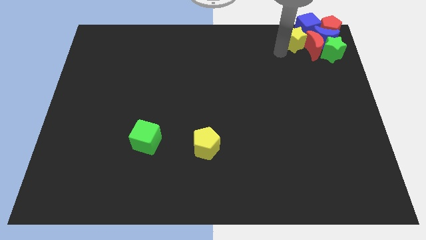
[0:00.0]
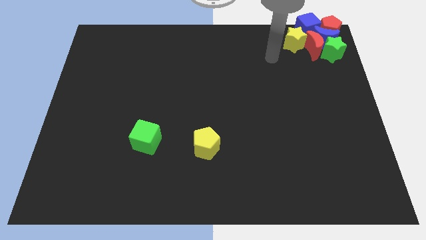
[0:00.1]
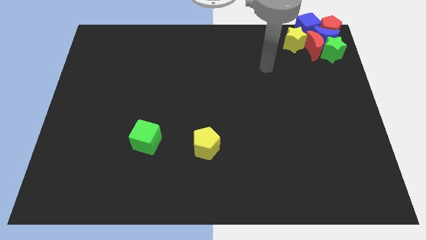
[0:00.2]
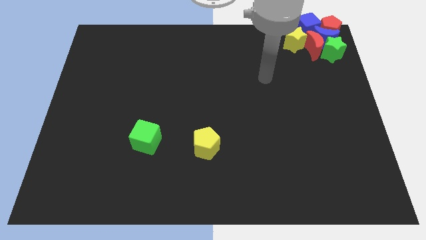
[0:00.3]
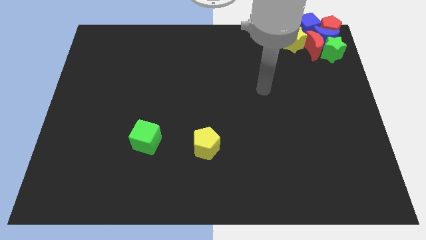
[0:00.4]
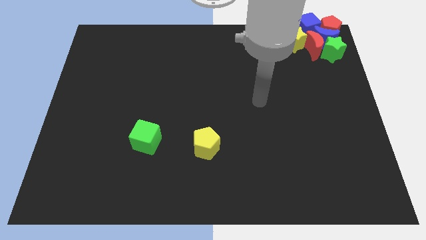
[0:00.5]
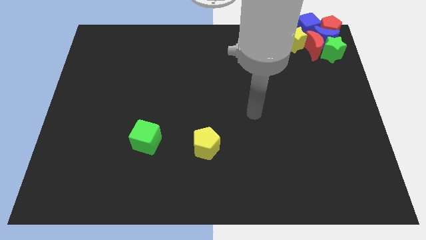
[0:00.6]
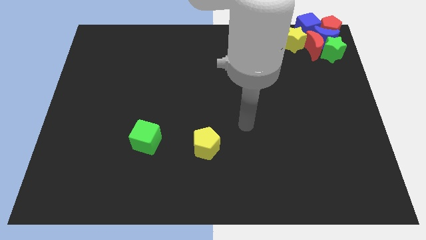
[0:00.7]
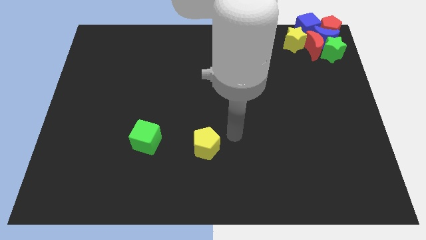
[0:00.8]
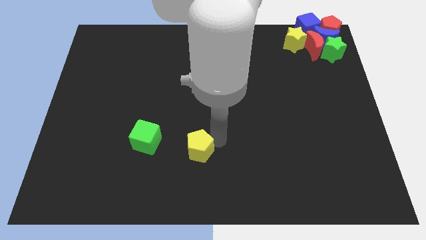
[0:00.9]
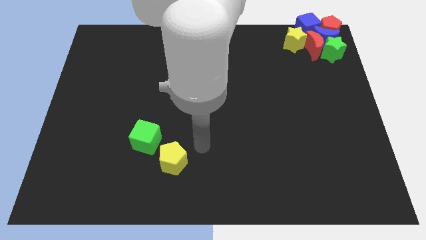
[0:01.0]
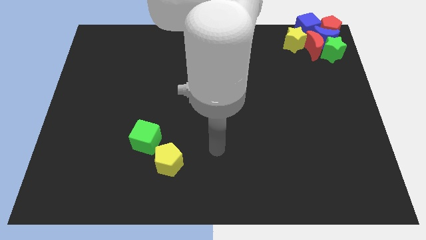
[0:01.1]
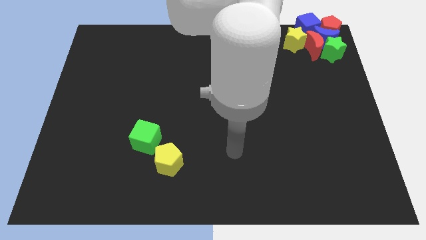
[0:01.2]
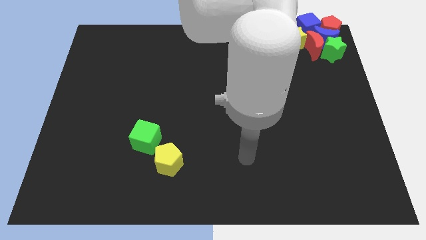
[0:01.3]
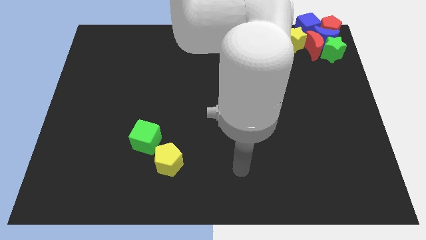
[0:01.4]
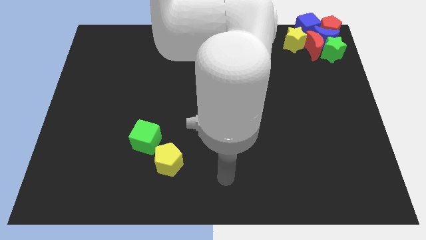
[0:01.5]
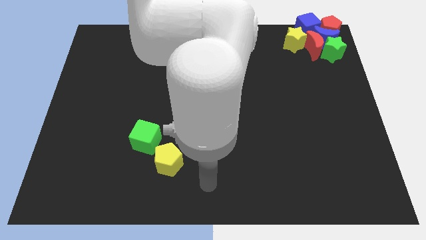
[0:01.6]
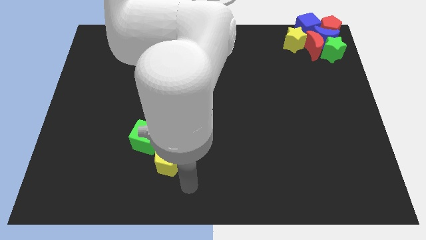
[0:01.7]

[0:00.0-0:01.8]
move the yellow pentagon to the bottom right of the green cube

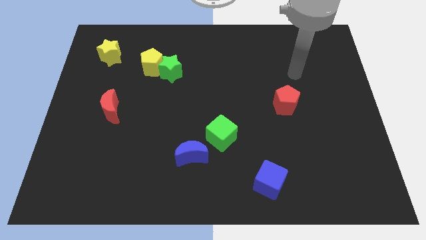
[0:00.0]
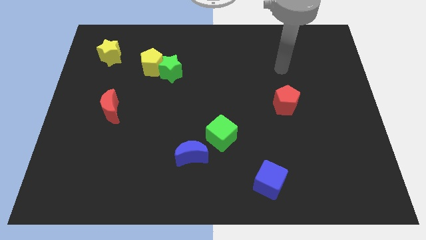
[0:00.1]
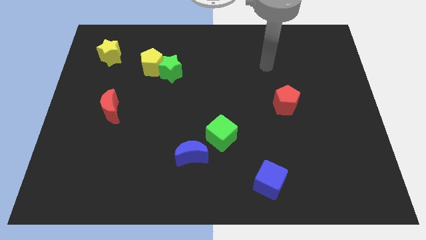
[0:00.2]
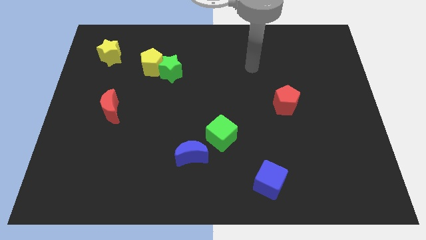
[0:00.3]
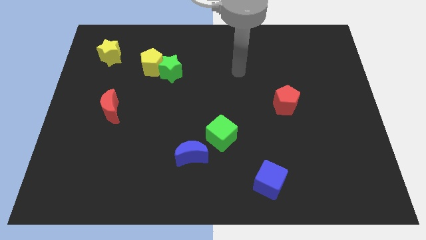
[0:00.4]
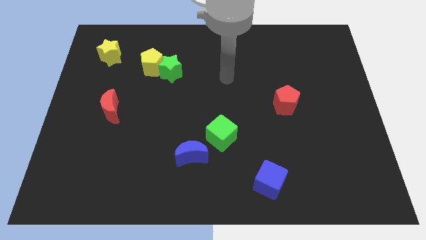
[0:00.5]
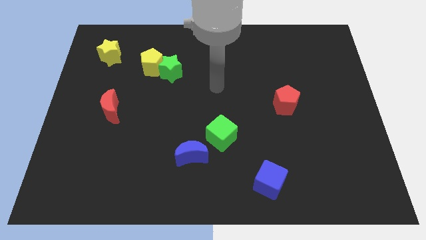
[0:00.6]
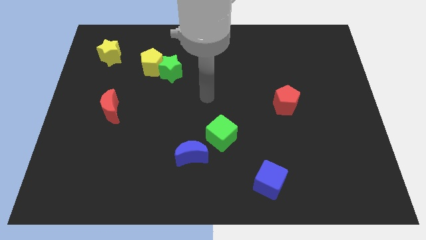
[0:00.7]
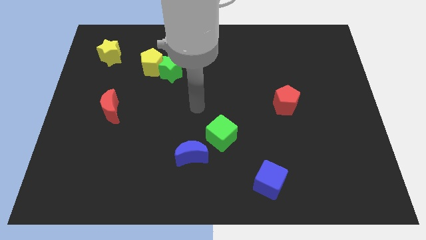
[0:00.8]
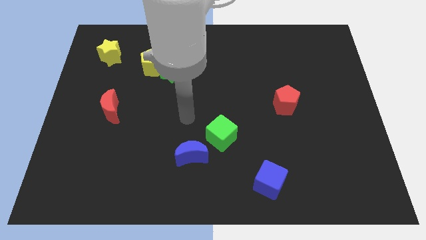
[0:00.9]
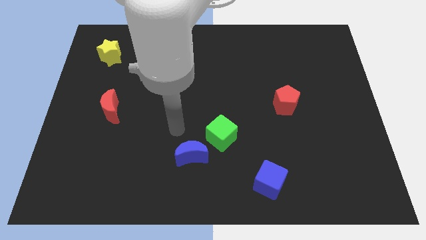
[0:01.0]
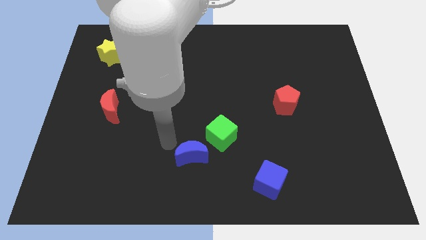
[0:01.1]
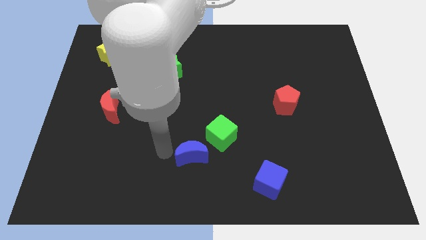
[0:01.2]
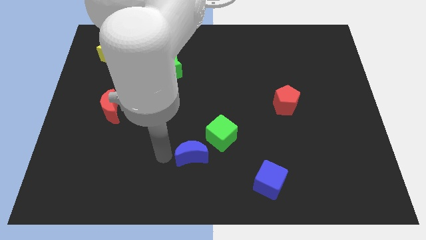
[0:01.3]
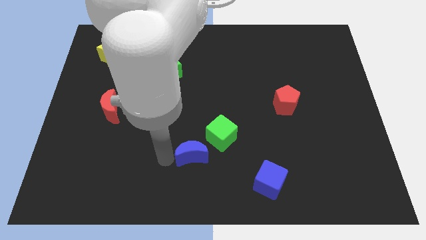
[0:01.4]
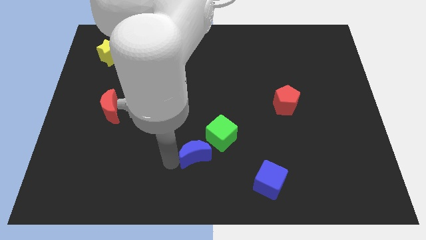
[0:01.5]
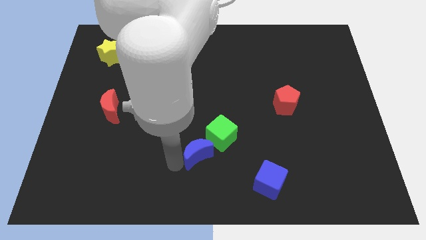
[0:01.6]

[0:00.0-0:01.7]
move your arm towards the left side of the blue crescent

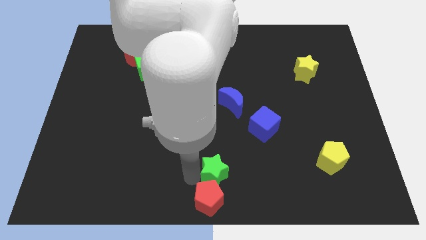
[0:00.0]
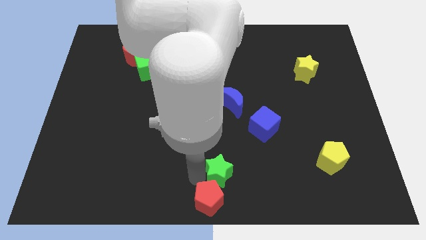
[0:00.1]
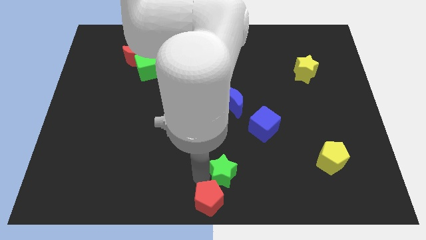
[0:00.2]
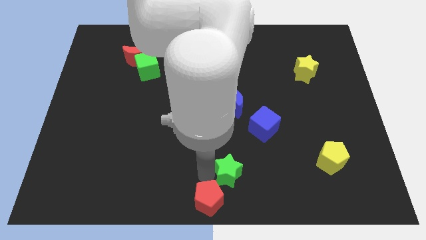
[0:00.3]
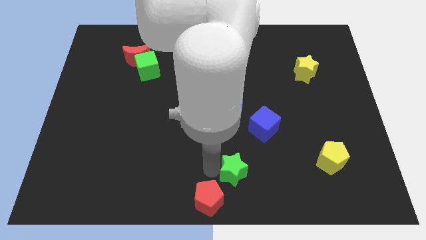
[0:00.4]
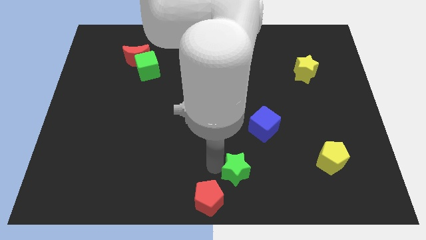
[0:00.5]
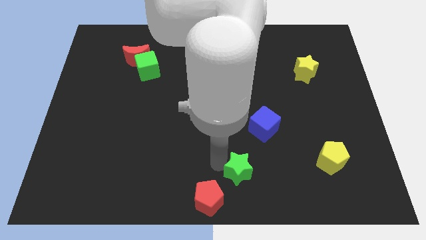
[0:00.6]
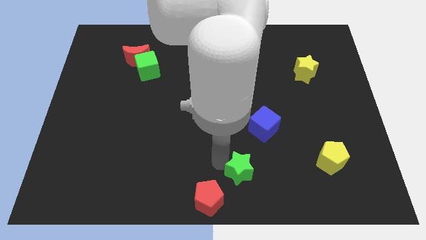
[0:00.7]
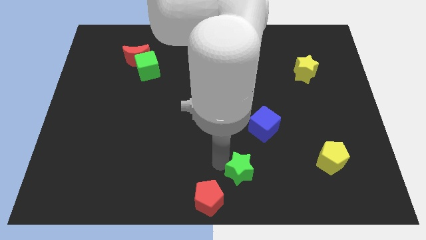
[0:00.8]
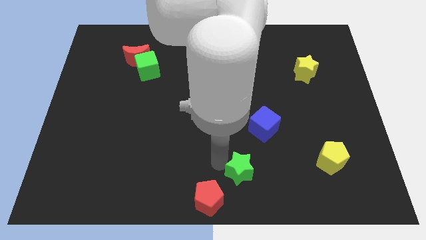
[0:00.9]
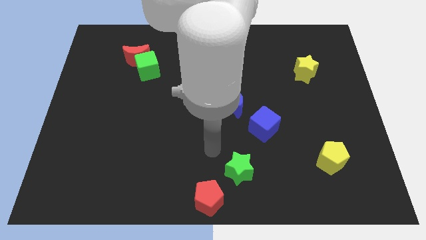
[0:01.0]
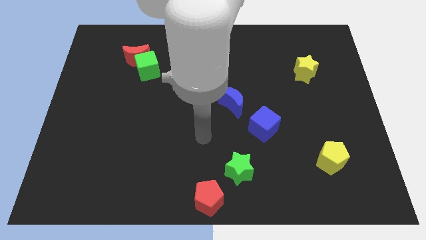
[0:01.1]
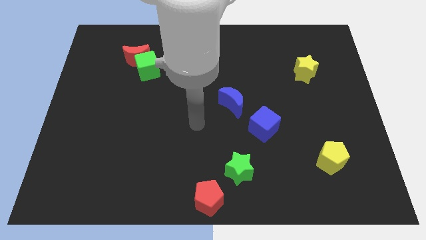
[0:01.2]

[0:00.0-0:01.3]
move the green star away from the red pentagon

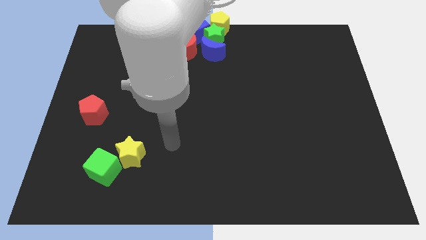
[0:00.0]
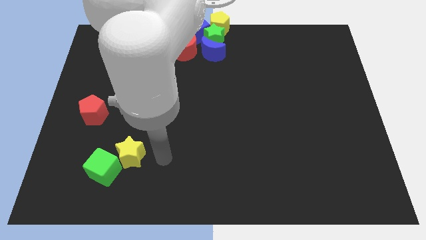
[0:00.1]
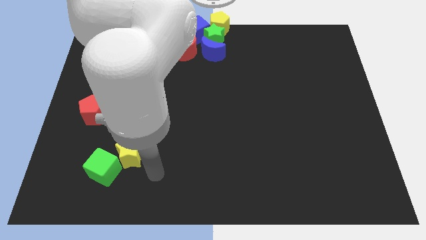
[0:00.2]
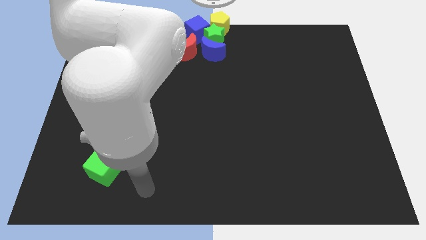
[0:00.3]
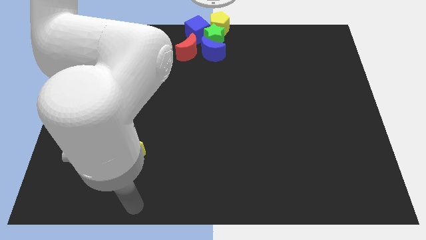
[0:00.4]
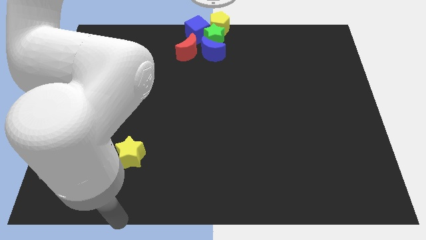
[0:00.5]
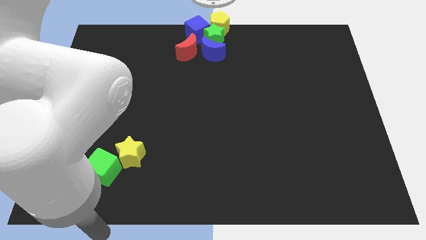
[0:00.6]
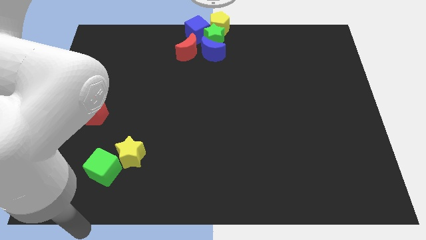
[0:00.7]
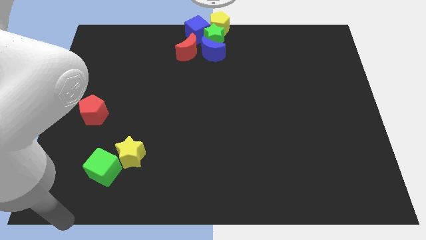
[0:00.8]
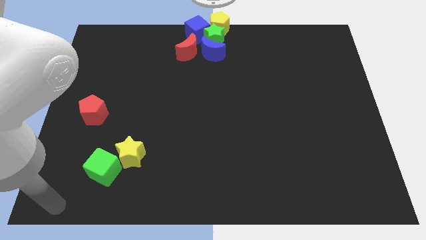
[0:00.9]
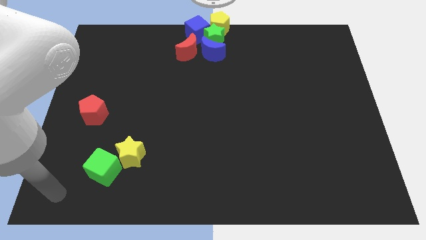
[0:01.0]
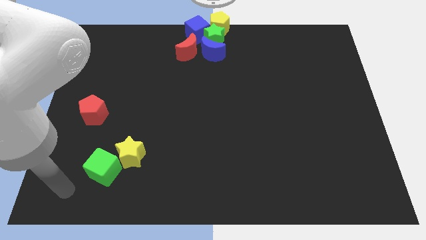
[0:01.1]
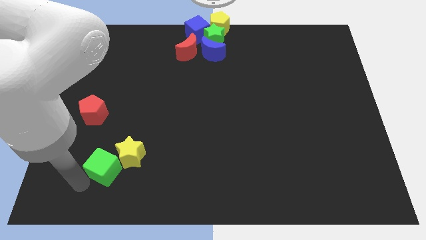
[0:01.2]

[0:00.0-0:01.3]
place your arm to the bottom of the green cube

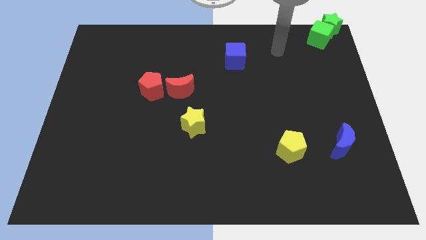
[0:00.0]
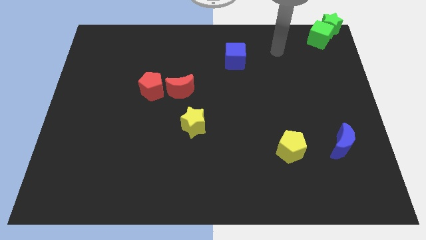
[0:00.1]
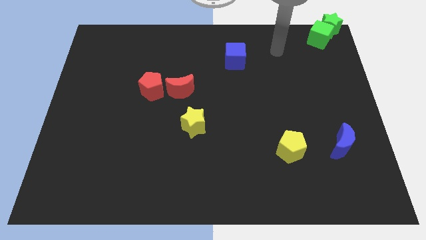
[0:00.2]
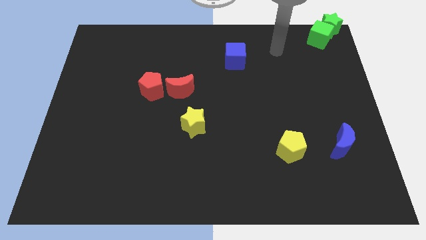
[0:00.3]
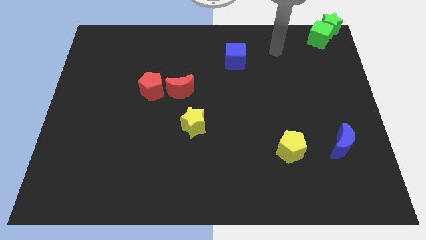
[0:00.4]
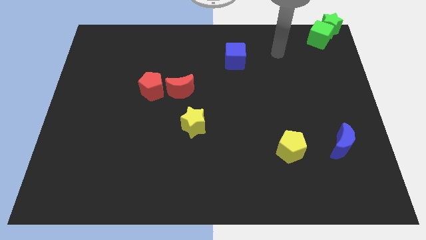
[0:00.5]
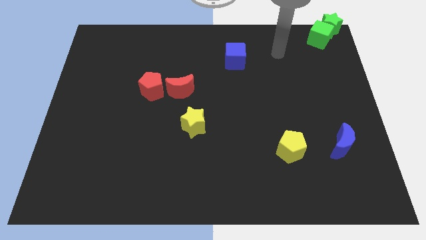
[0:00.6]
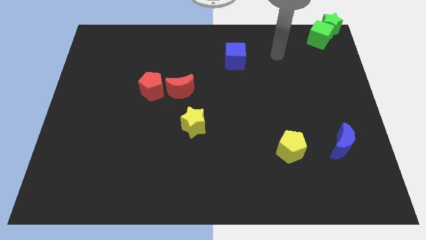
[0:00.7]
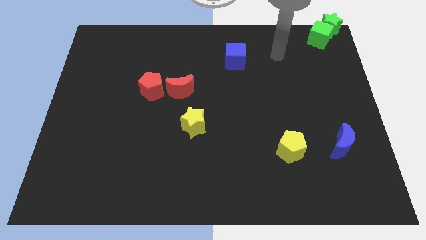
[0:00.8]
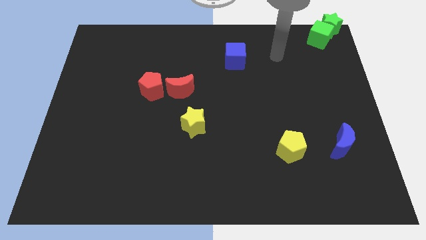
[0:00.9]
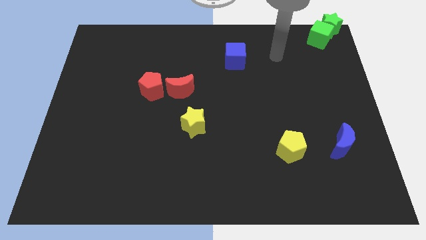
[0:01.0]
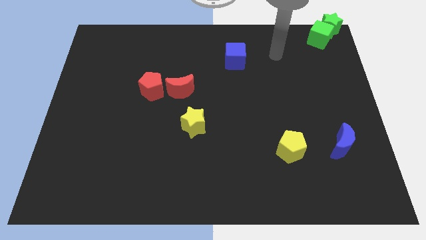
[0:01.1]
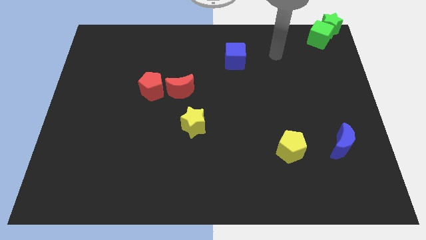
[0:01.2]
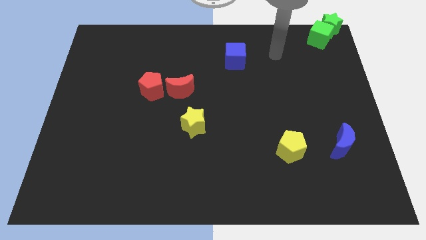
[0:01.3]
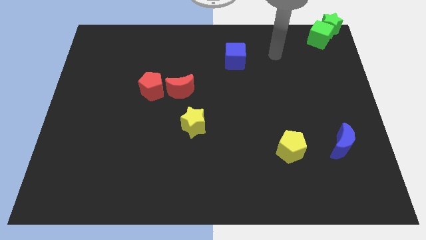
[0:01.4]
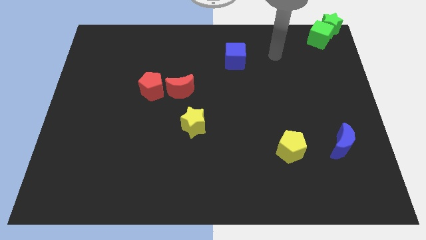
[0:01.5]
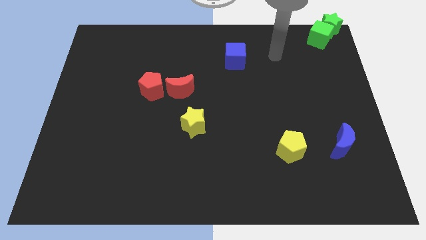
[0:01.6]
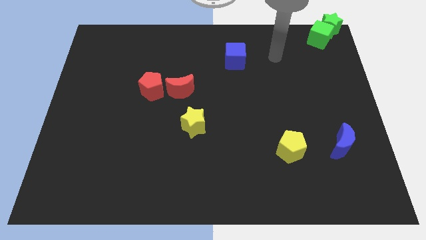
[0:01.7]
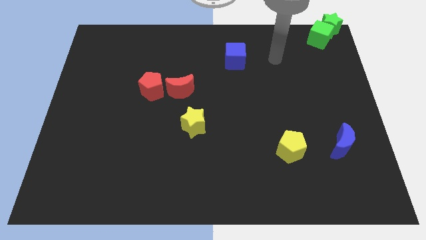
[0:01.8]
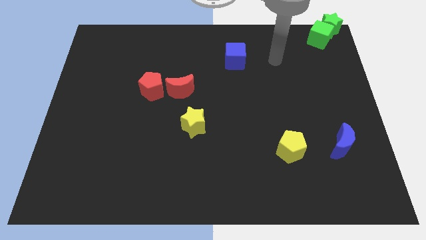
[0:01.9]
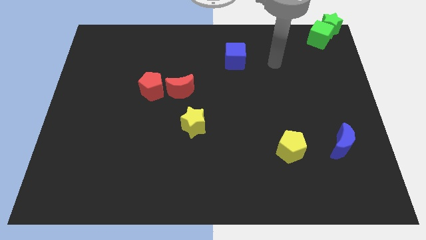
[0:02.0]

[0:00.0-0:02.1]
point your arm to the right side of the blue cube

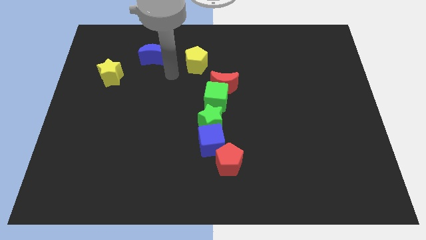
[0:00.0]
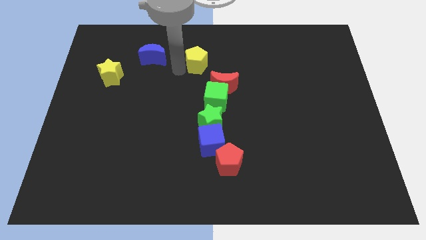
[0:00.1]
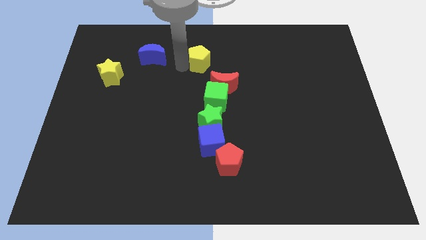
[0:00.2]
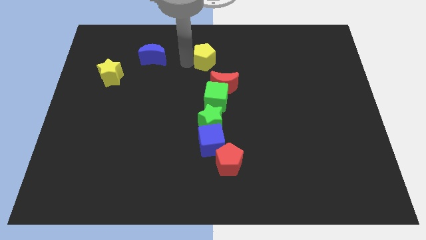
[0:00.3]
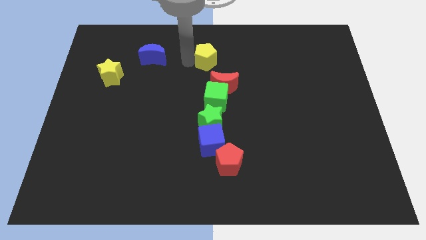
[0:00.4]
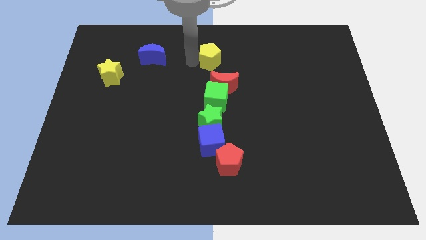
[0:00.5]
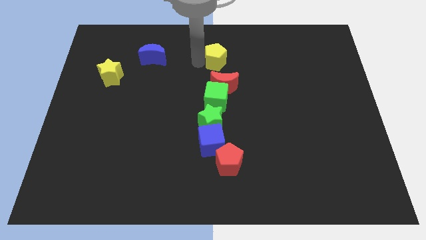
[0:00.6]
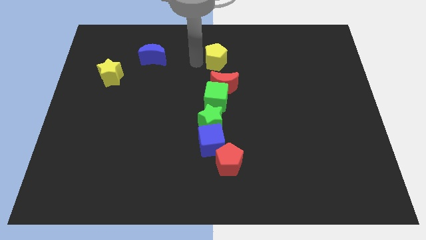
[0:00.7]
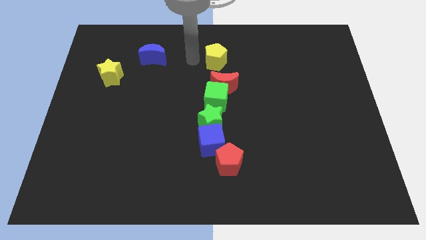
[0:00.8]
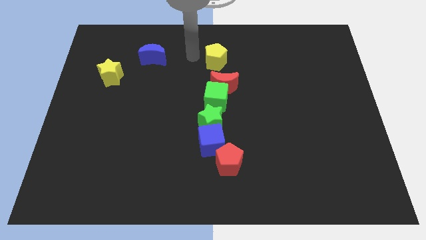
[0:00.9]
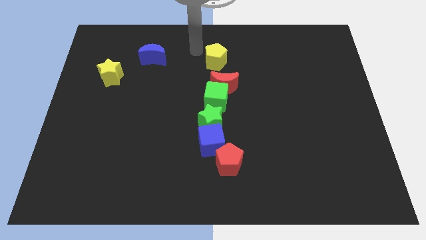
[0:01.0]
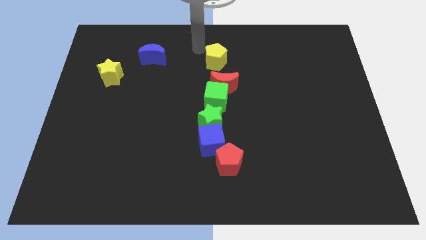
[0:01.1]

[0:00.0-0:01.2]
move yellow pentagon above red moon
